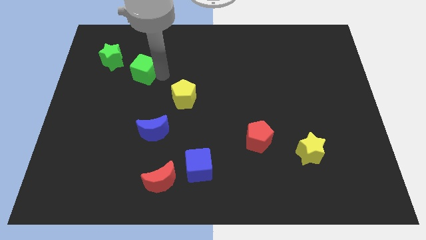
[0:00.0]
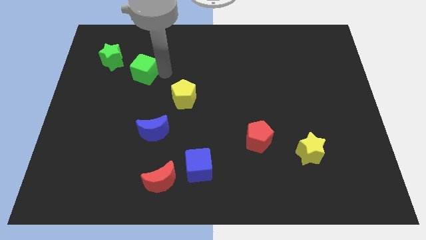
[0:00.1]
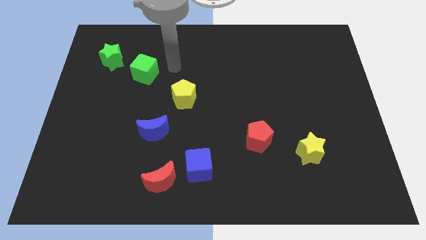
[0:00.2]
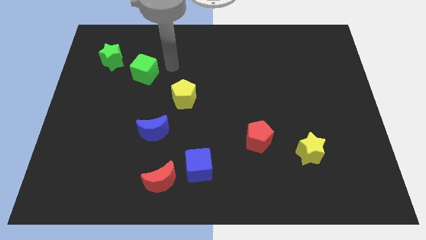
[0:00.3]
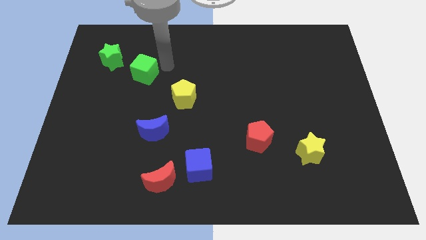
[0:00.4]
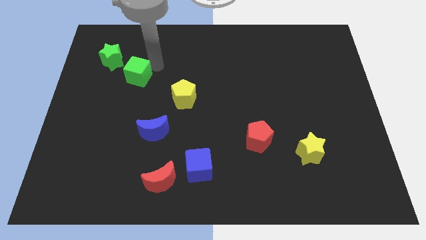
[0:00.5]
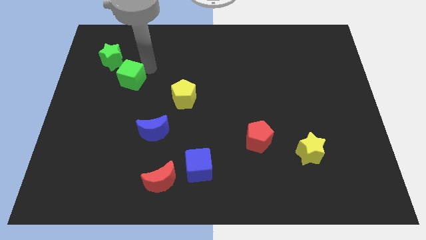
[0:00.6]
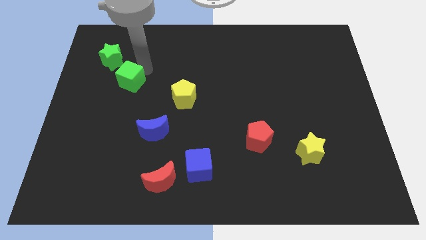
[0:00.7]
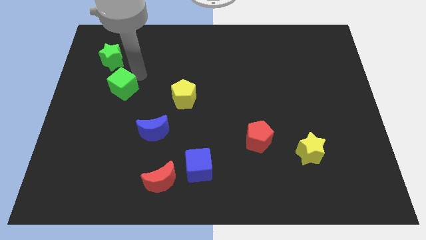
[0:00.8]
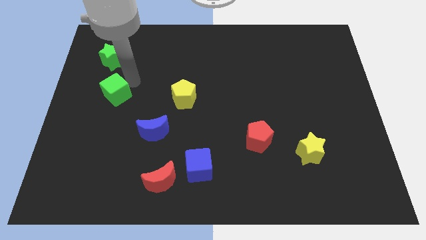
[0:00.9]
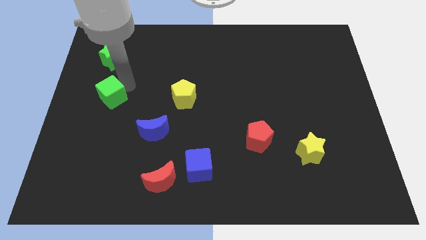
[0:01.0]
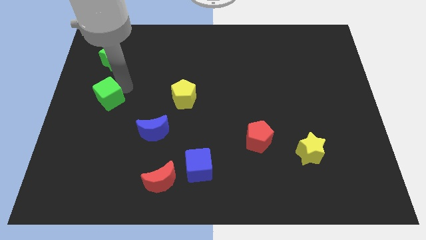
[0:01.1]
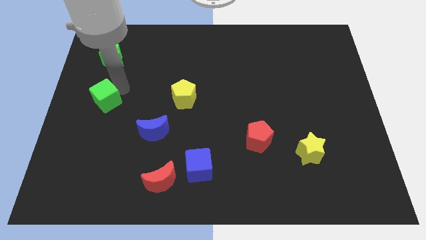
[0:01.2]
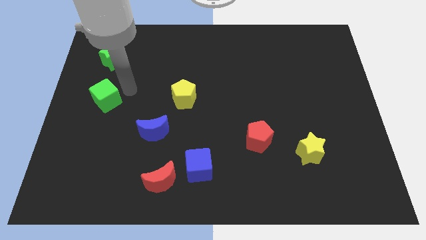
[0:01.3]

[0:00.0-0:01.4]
place the green cube vertically below the green star

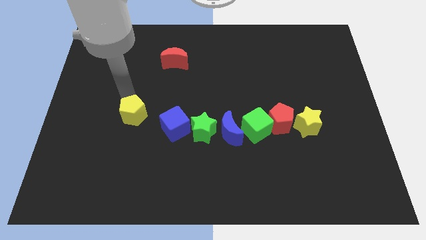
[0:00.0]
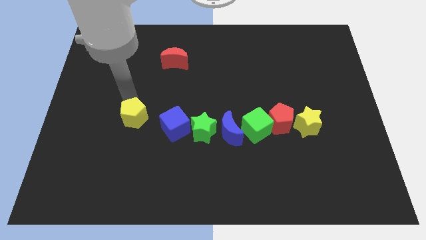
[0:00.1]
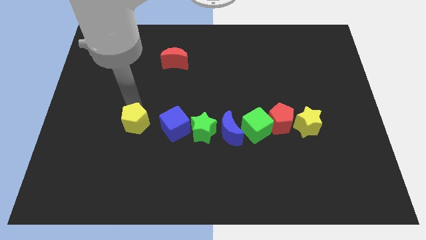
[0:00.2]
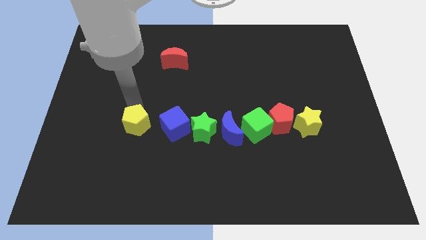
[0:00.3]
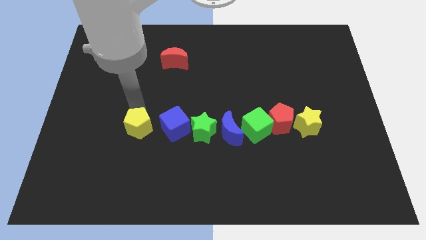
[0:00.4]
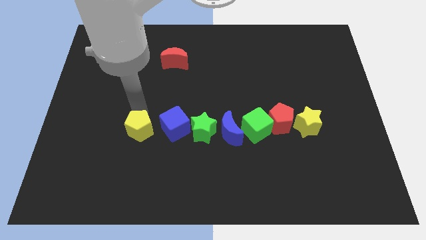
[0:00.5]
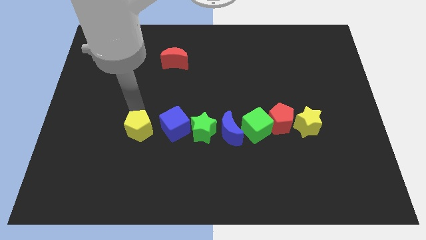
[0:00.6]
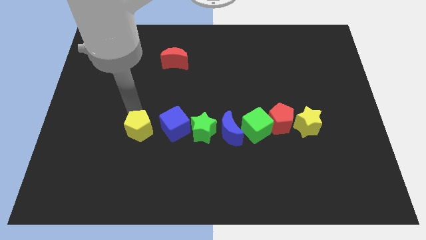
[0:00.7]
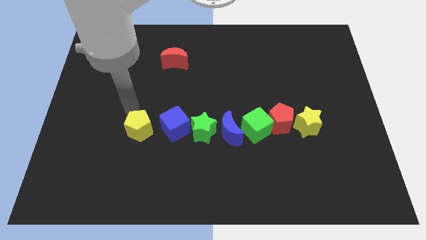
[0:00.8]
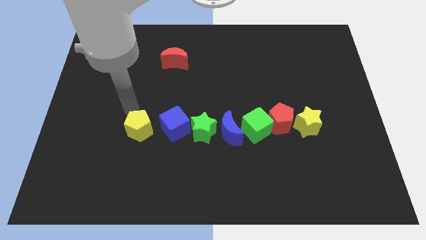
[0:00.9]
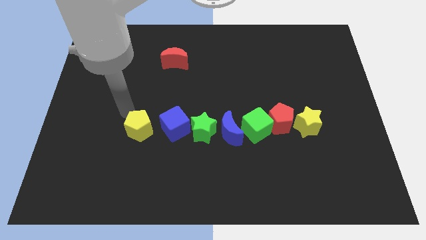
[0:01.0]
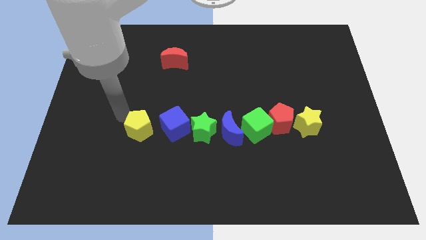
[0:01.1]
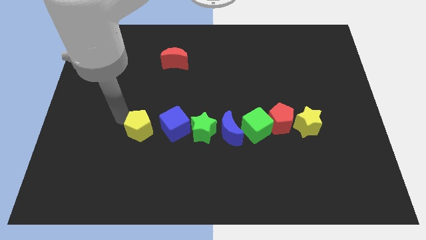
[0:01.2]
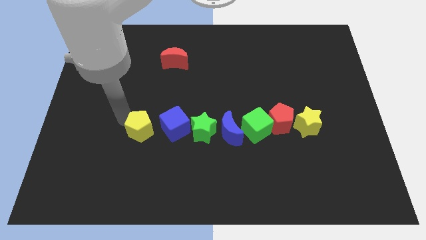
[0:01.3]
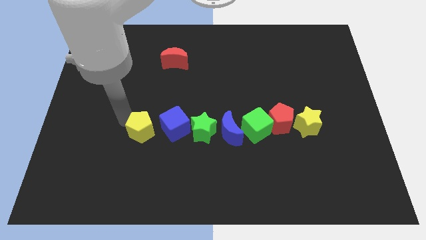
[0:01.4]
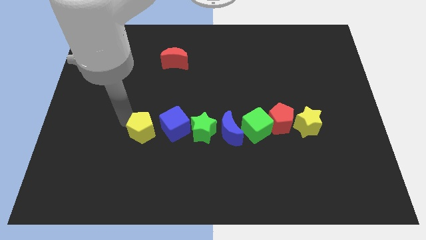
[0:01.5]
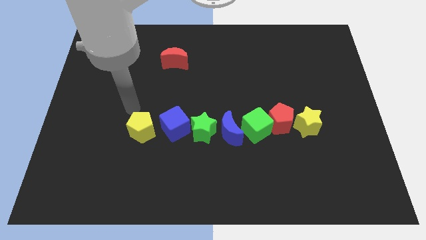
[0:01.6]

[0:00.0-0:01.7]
push the yellow pentagon towards the center line

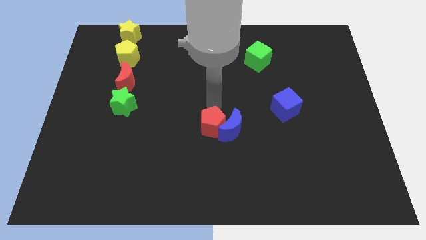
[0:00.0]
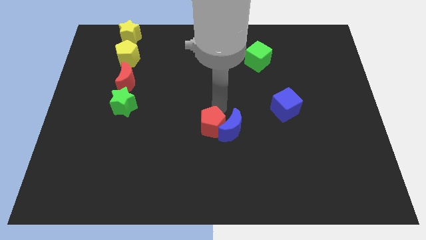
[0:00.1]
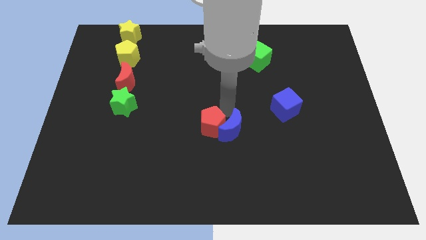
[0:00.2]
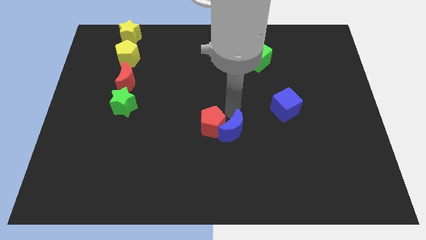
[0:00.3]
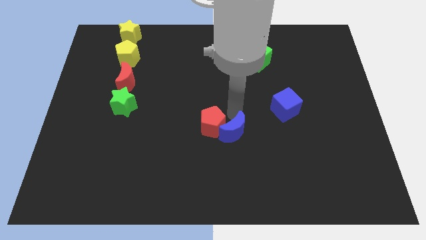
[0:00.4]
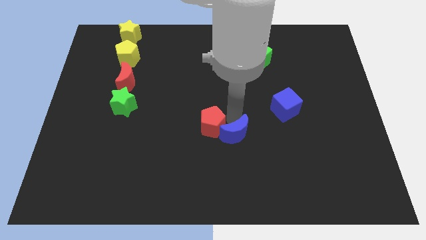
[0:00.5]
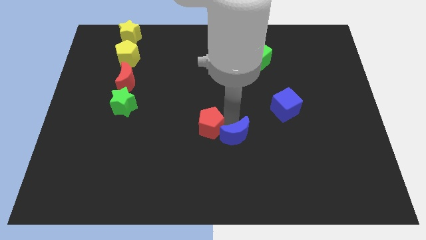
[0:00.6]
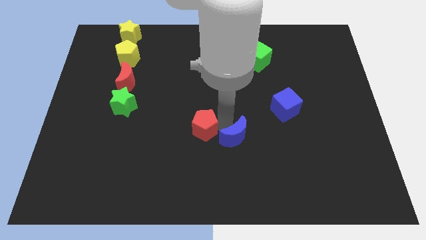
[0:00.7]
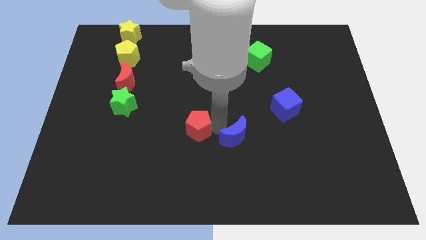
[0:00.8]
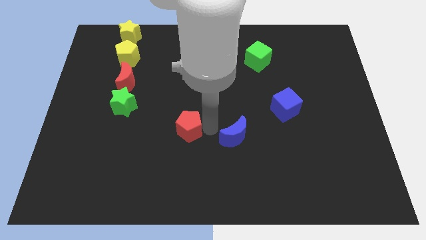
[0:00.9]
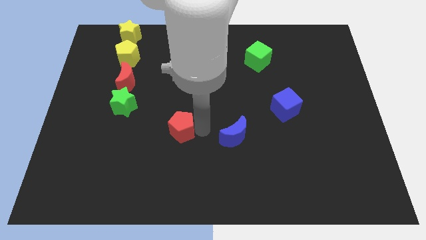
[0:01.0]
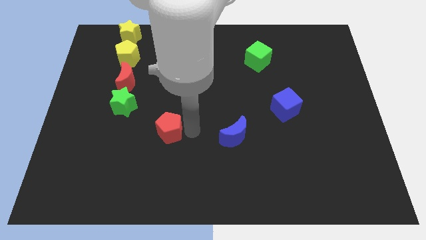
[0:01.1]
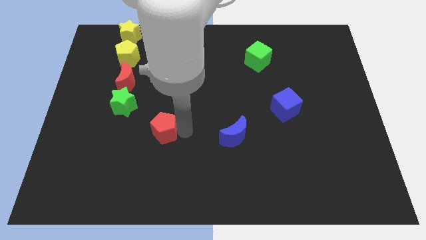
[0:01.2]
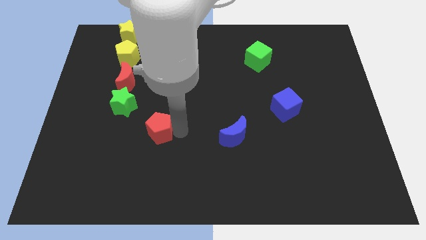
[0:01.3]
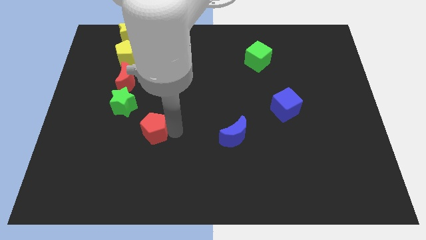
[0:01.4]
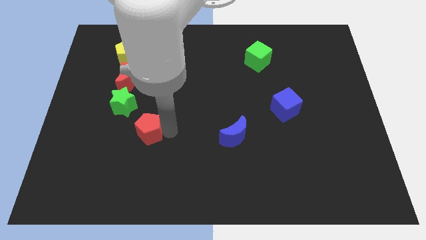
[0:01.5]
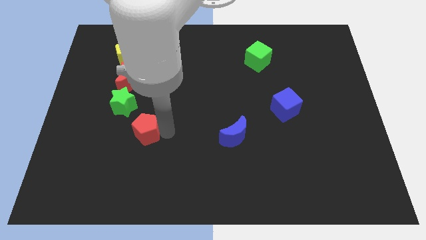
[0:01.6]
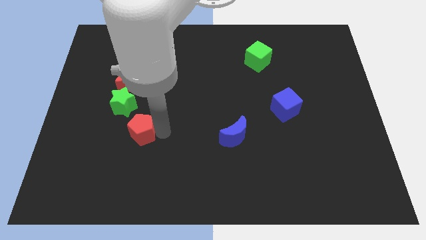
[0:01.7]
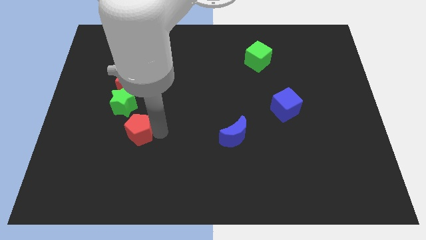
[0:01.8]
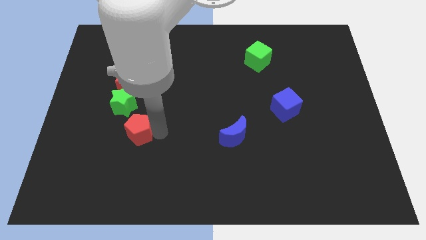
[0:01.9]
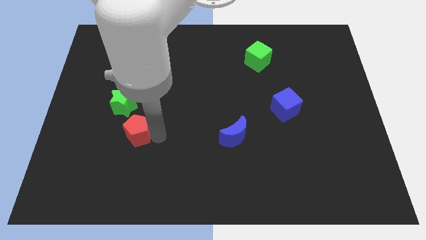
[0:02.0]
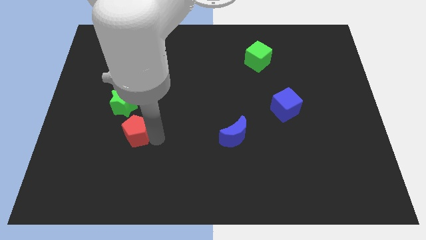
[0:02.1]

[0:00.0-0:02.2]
separate red pentagon from blue moon

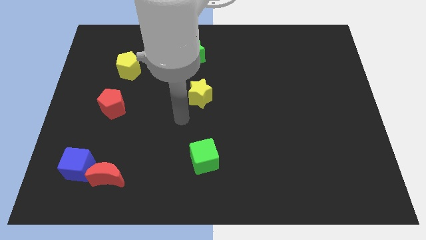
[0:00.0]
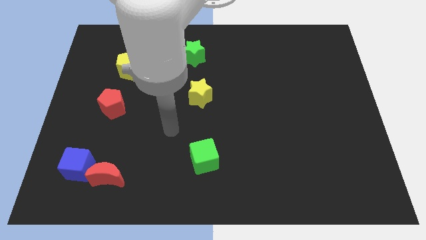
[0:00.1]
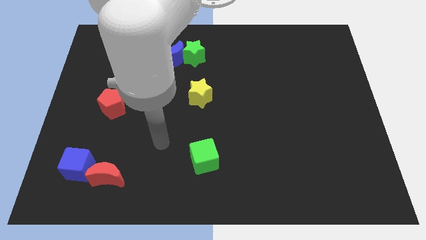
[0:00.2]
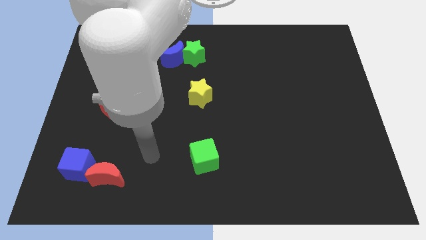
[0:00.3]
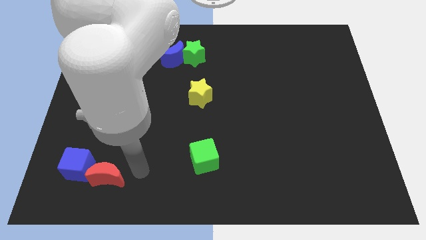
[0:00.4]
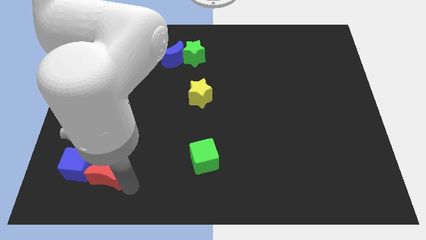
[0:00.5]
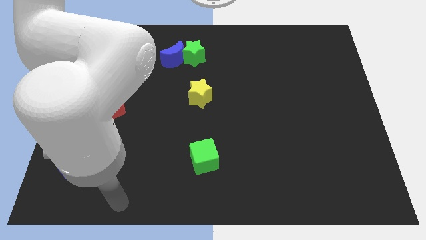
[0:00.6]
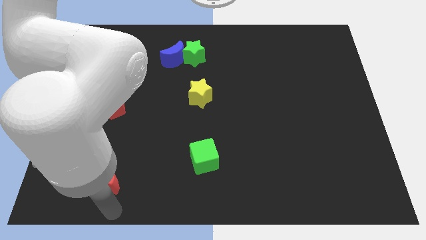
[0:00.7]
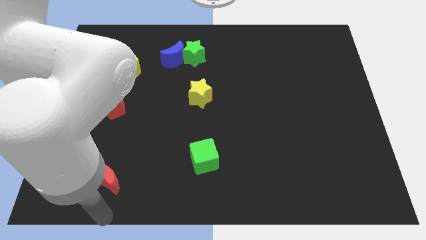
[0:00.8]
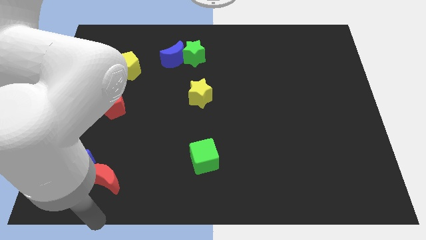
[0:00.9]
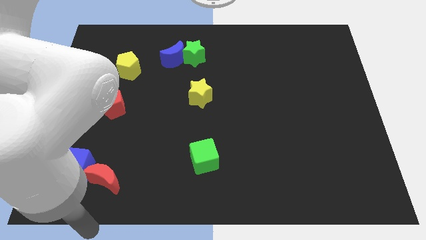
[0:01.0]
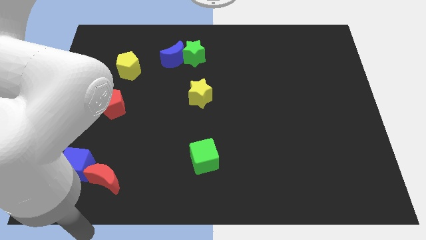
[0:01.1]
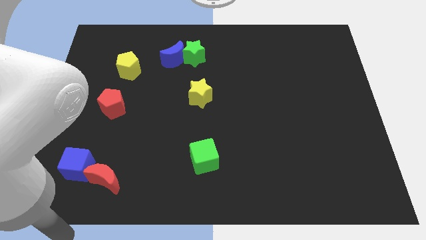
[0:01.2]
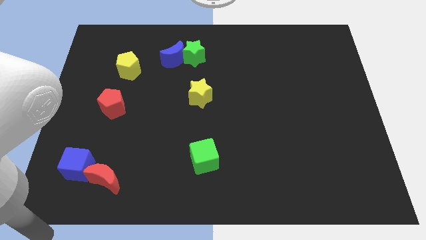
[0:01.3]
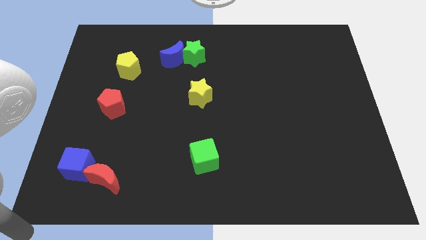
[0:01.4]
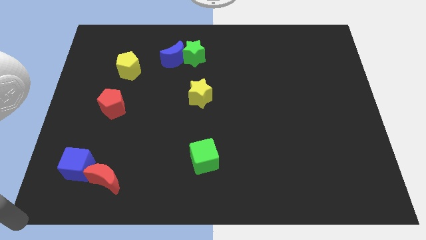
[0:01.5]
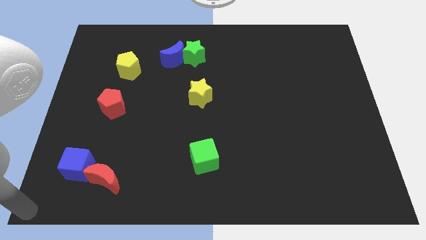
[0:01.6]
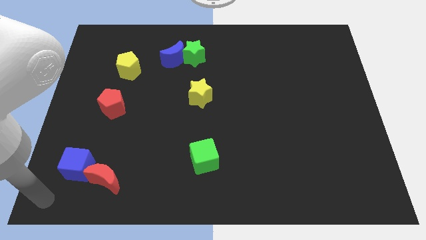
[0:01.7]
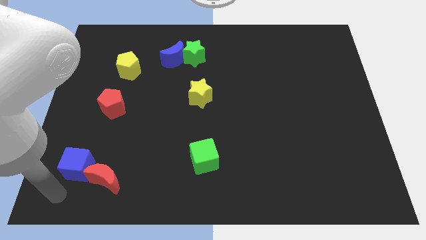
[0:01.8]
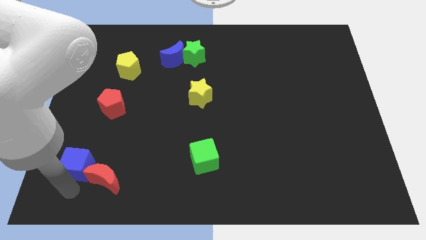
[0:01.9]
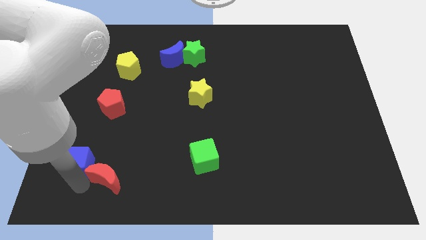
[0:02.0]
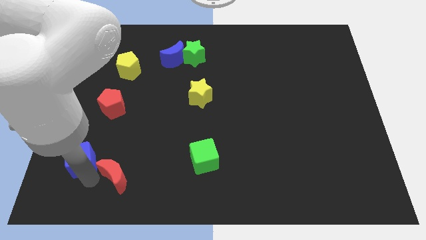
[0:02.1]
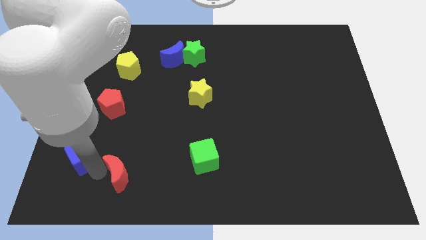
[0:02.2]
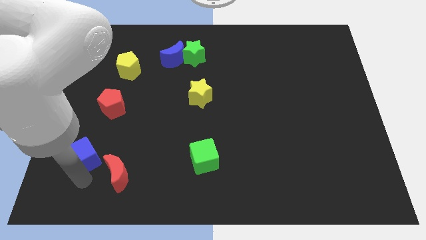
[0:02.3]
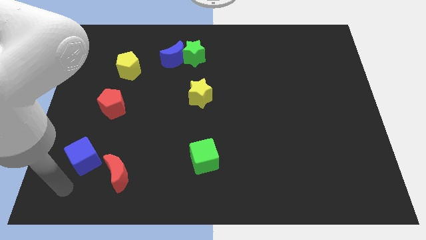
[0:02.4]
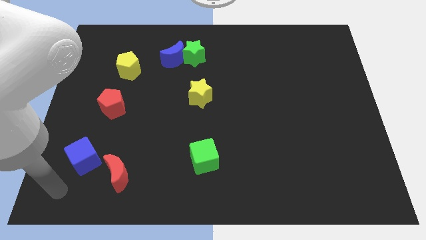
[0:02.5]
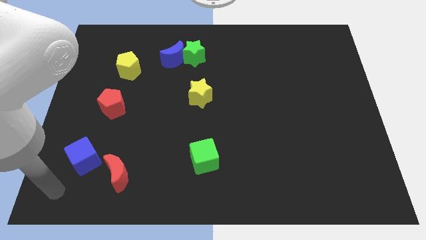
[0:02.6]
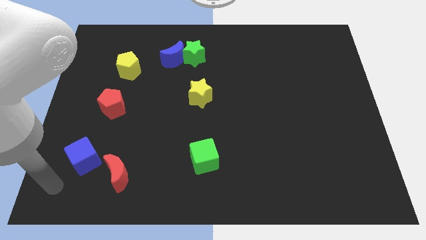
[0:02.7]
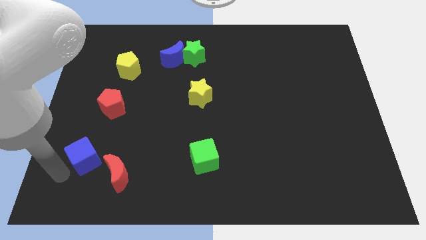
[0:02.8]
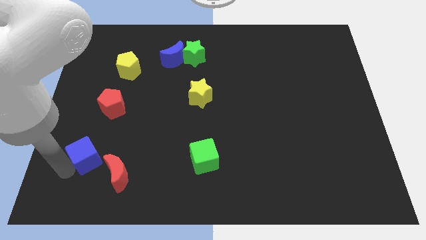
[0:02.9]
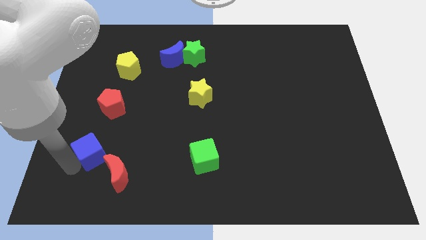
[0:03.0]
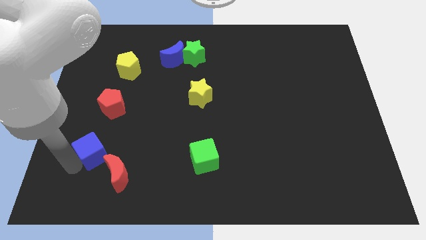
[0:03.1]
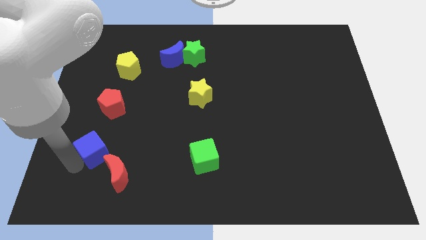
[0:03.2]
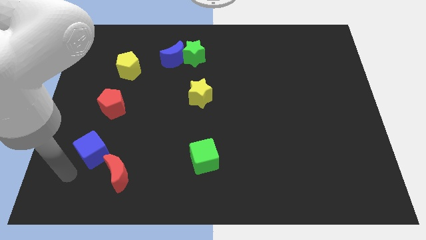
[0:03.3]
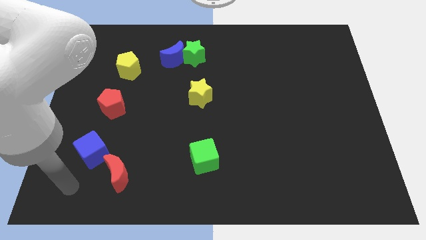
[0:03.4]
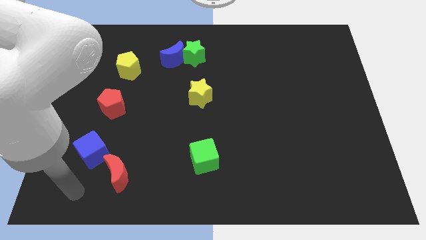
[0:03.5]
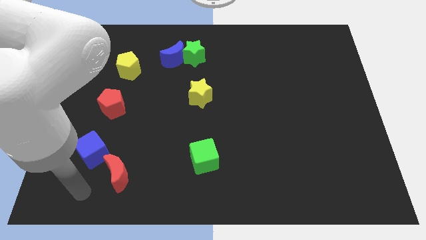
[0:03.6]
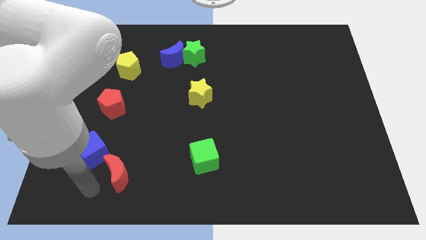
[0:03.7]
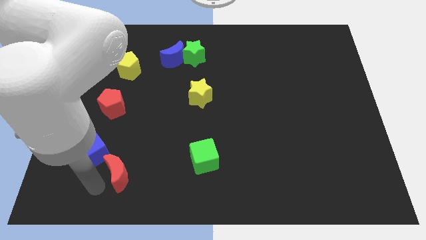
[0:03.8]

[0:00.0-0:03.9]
place your arm in between the red moon and the blue cube
